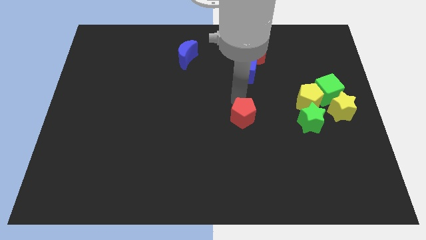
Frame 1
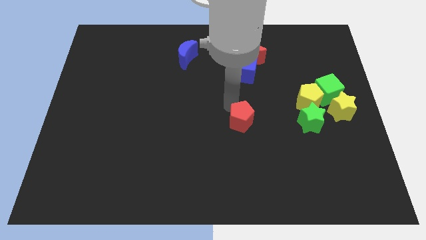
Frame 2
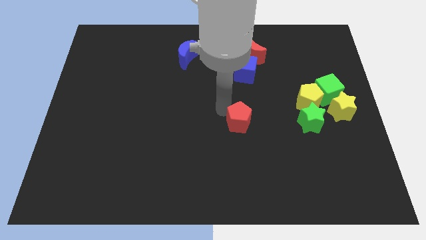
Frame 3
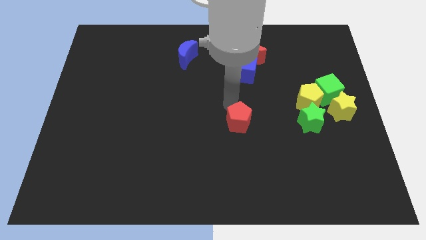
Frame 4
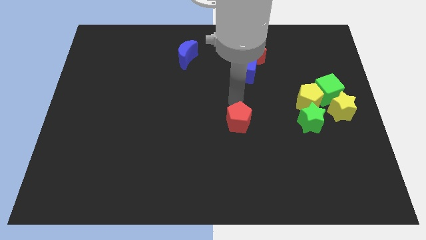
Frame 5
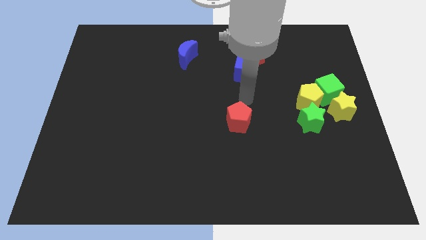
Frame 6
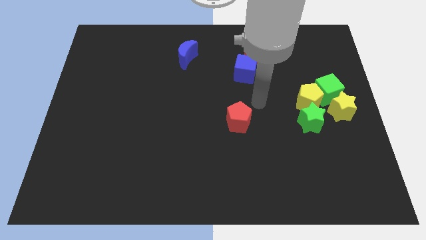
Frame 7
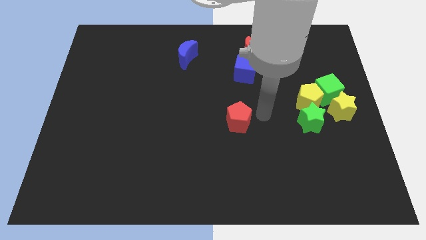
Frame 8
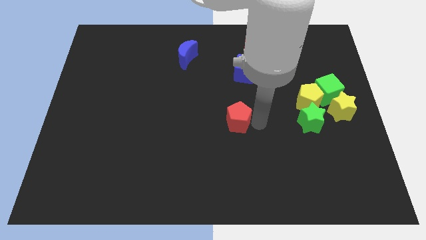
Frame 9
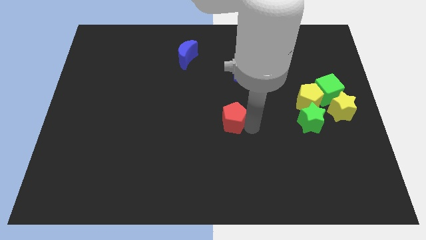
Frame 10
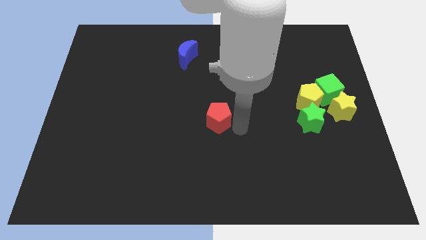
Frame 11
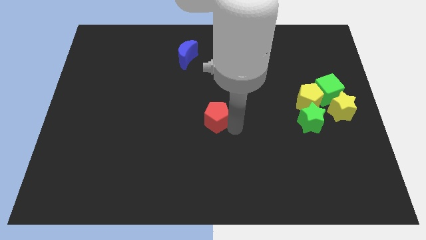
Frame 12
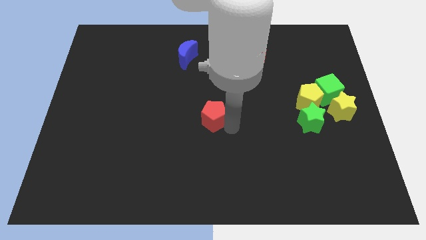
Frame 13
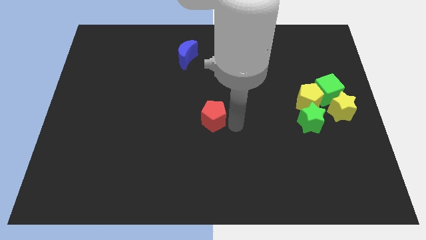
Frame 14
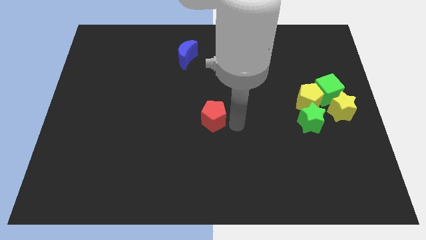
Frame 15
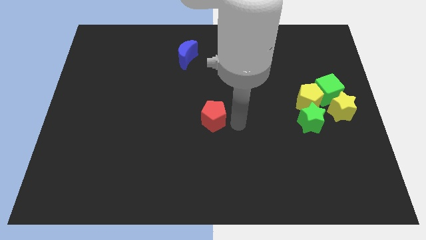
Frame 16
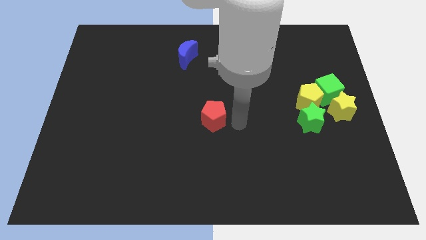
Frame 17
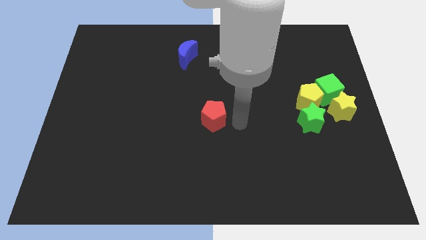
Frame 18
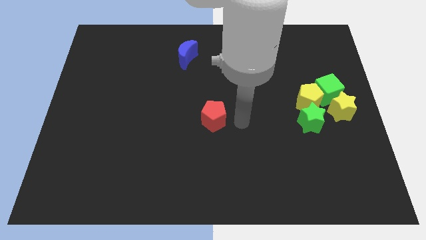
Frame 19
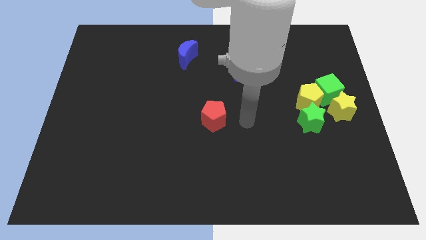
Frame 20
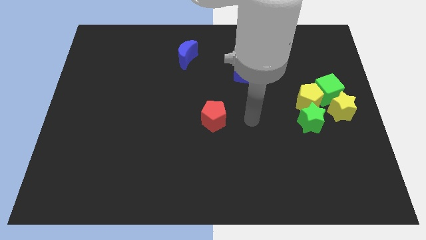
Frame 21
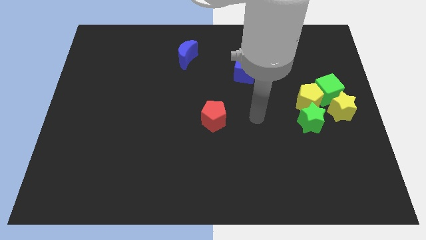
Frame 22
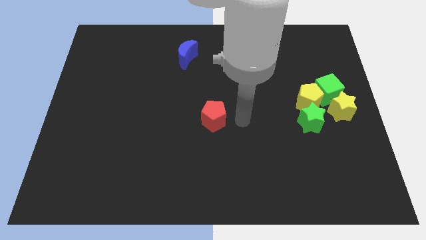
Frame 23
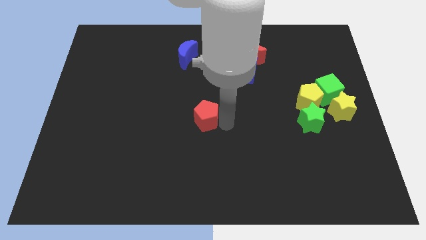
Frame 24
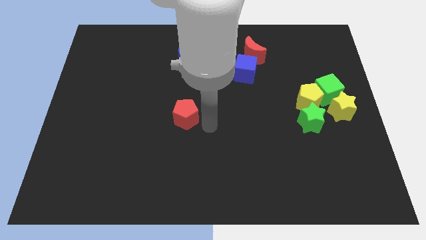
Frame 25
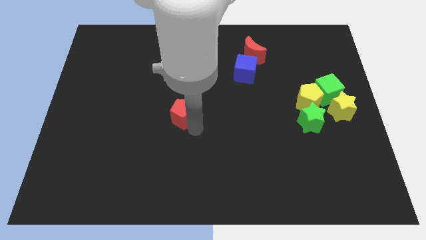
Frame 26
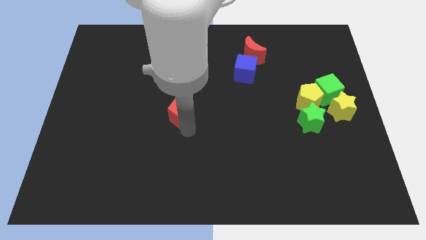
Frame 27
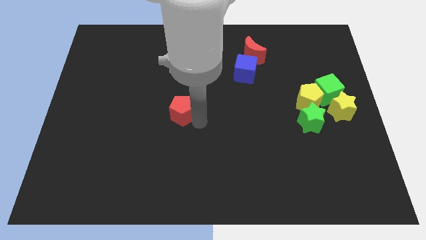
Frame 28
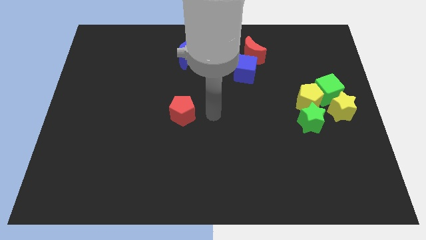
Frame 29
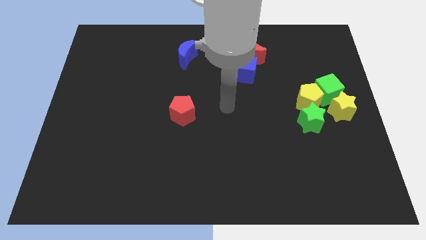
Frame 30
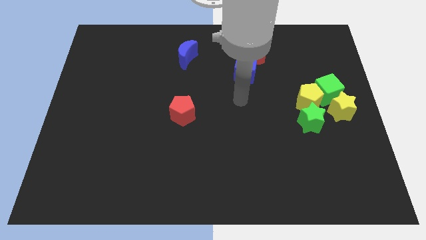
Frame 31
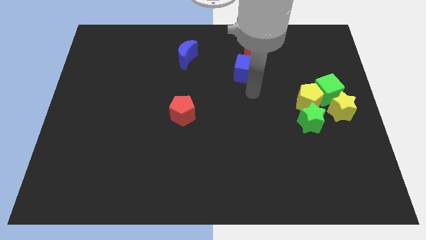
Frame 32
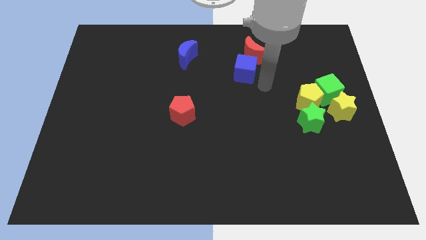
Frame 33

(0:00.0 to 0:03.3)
put the red pentagon at the bottom of blue moon

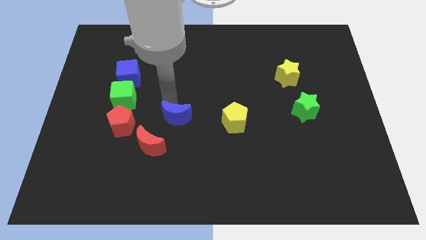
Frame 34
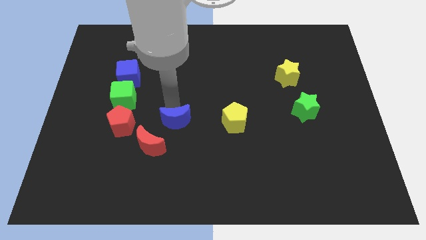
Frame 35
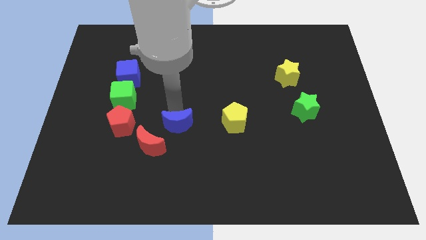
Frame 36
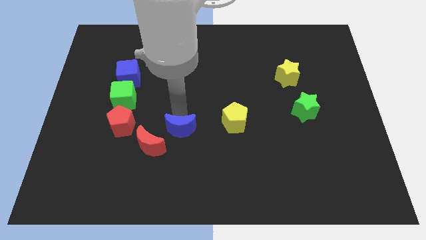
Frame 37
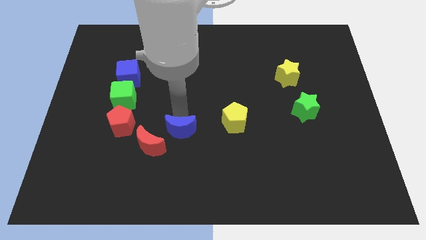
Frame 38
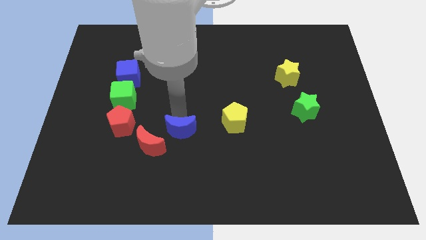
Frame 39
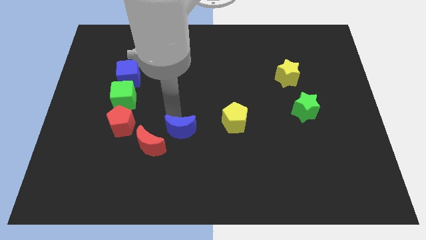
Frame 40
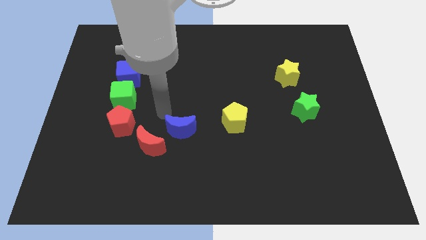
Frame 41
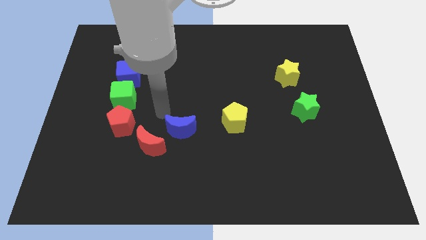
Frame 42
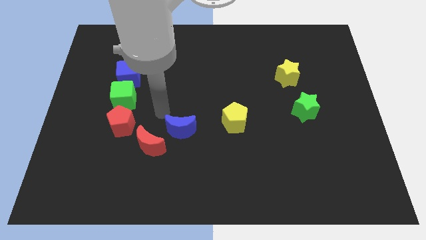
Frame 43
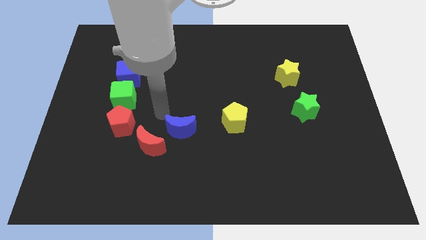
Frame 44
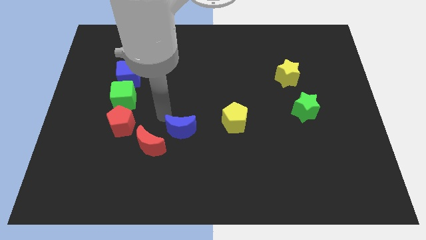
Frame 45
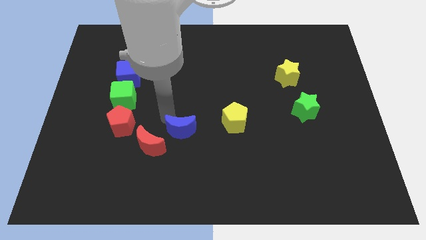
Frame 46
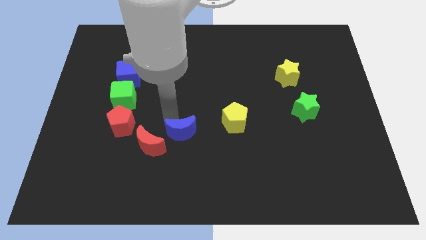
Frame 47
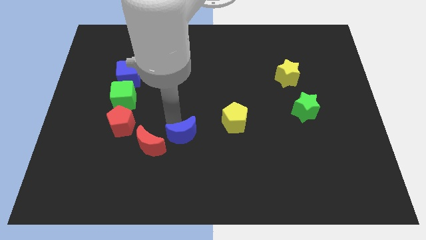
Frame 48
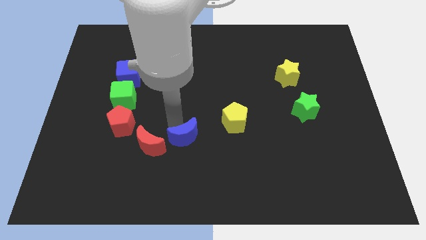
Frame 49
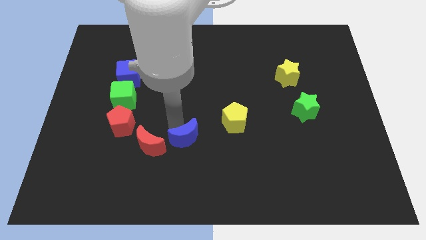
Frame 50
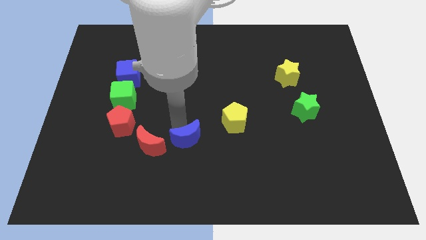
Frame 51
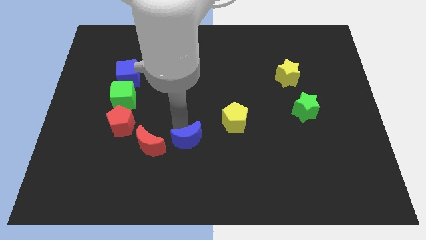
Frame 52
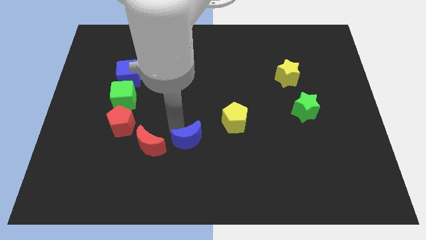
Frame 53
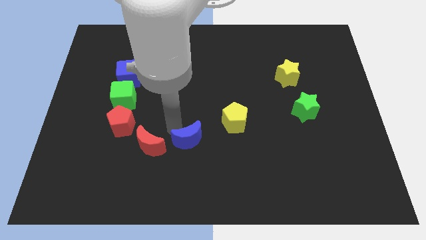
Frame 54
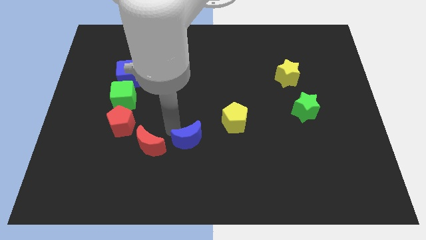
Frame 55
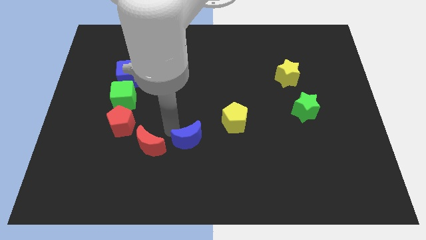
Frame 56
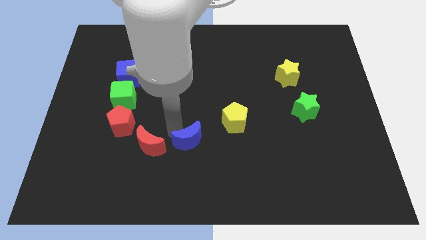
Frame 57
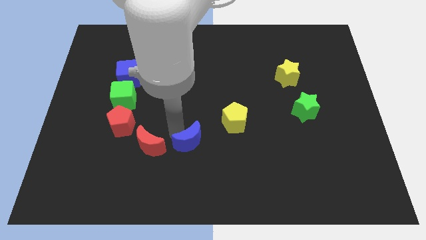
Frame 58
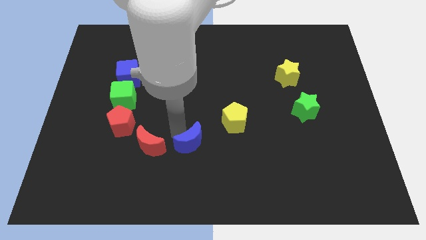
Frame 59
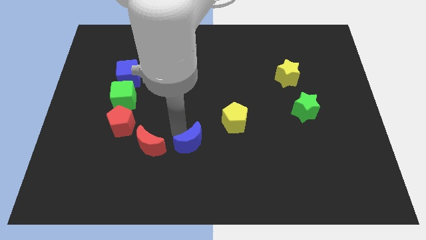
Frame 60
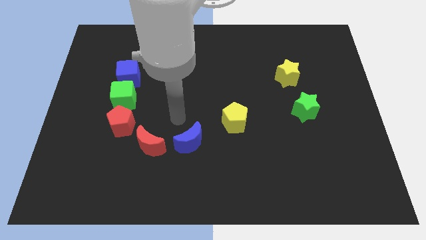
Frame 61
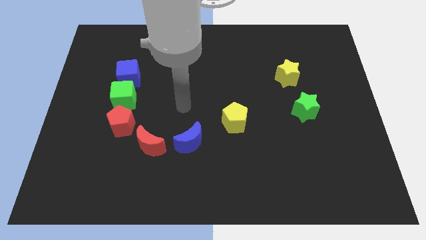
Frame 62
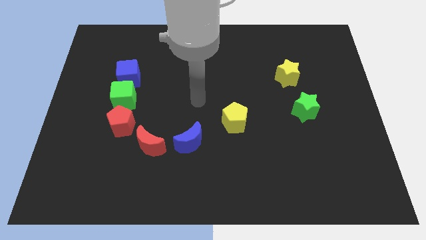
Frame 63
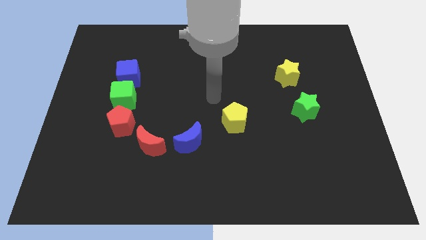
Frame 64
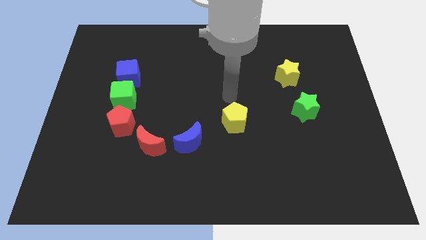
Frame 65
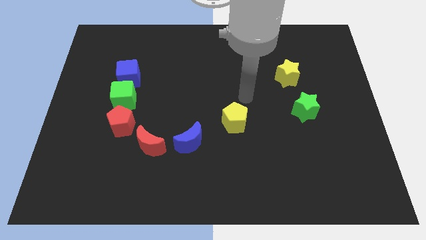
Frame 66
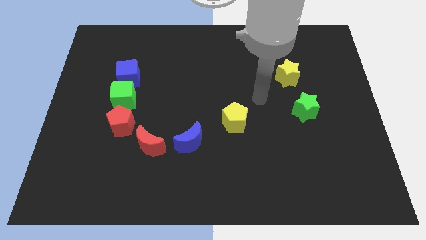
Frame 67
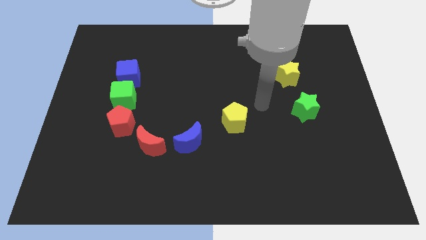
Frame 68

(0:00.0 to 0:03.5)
place the blue moon to the right of the red moon

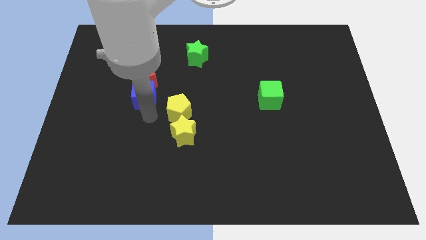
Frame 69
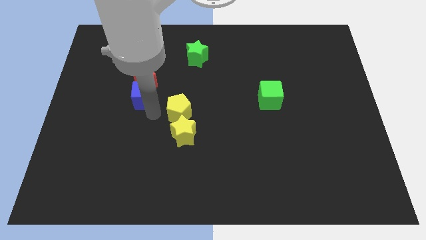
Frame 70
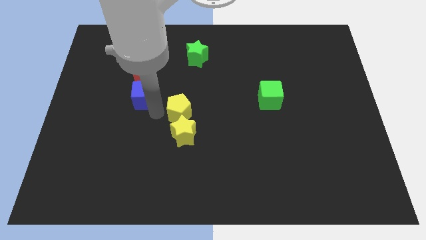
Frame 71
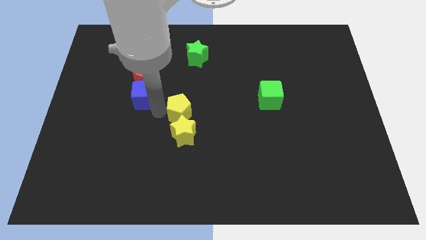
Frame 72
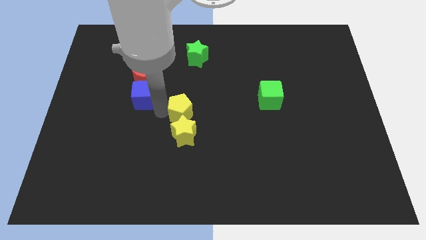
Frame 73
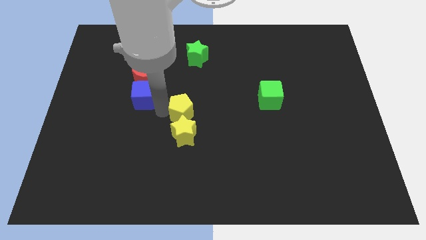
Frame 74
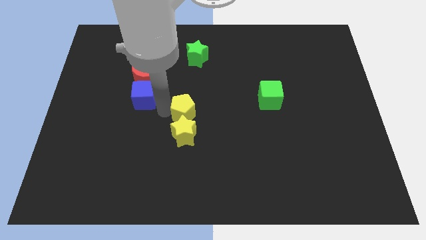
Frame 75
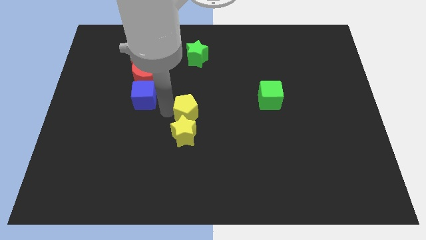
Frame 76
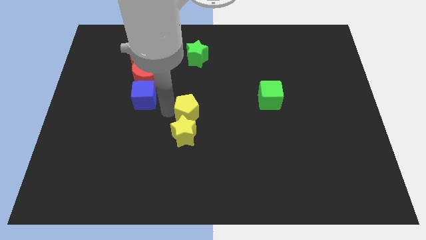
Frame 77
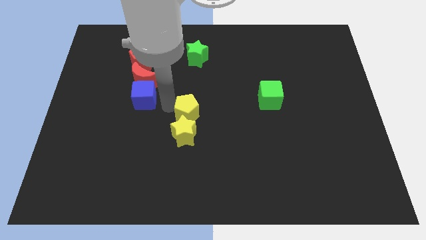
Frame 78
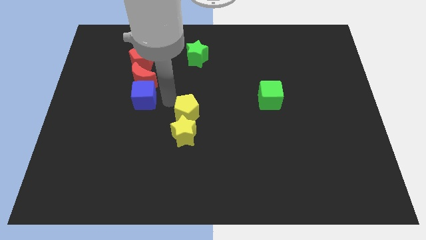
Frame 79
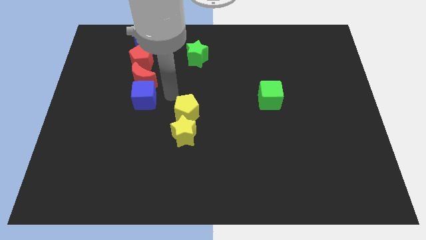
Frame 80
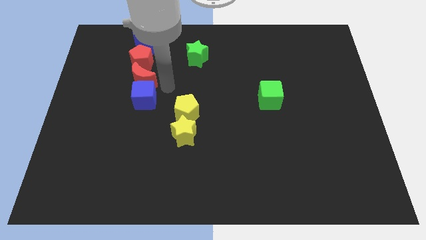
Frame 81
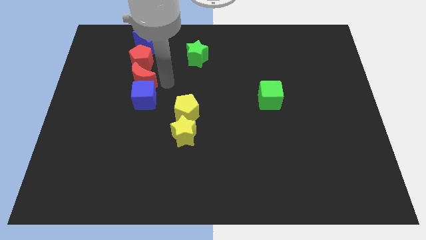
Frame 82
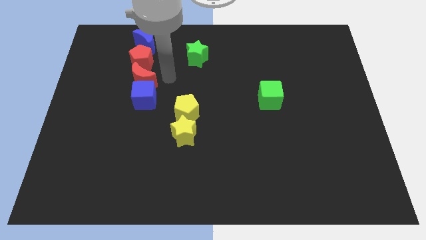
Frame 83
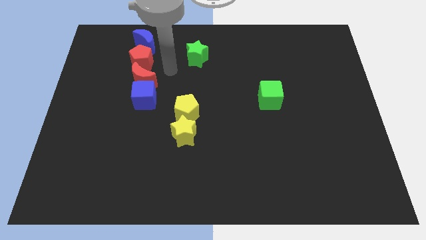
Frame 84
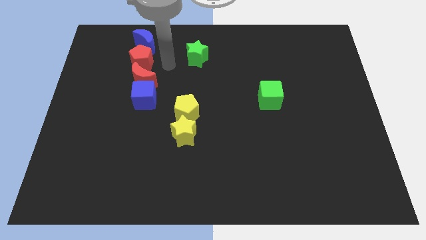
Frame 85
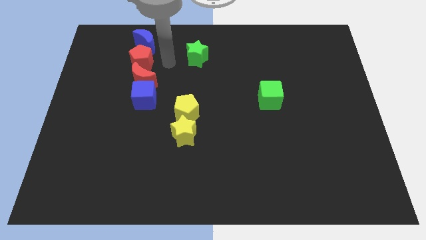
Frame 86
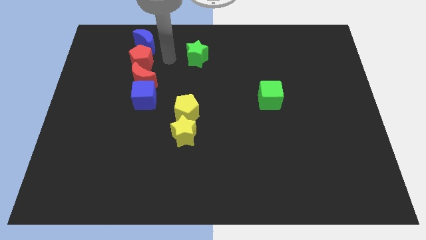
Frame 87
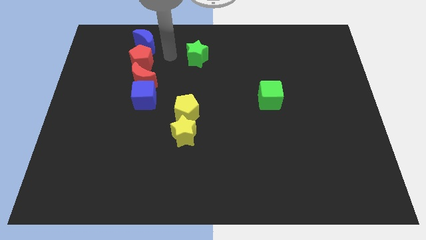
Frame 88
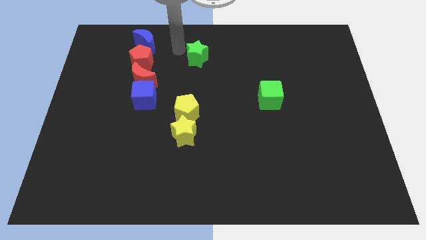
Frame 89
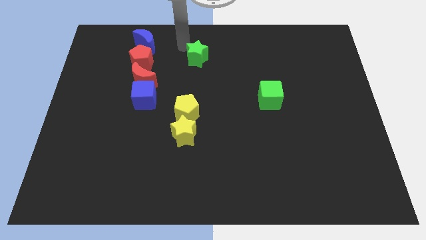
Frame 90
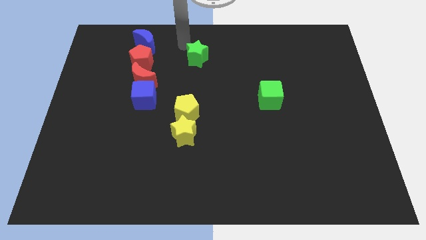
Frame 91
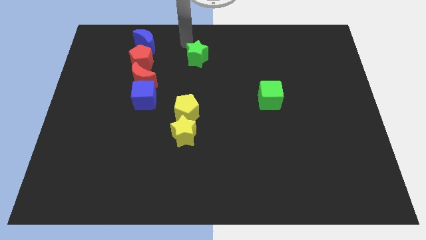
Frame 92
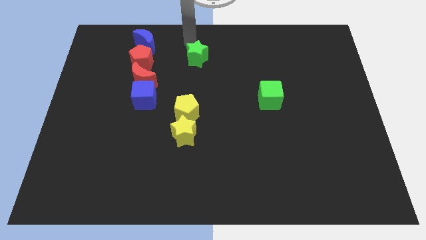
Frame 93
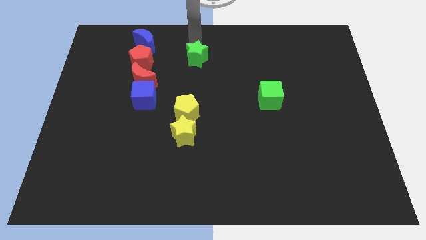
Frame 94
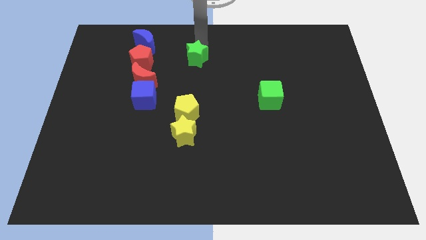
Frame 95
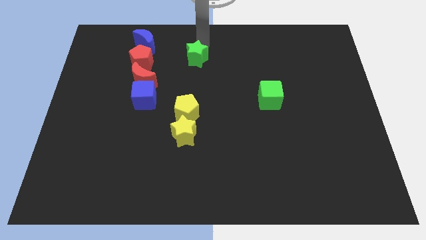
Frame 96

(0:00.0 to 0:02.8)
place the arm above the green star
